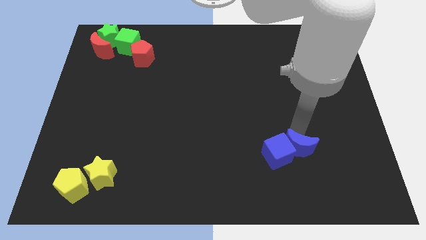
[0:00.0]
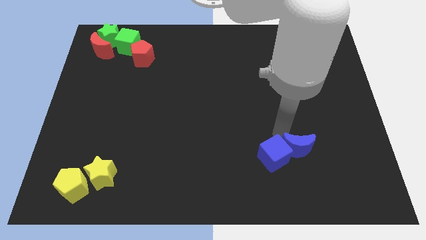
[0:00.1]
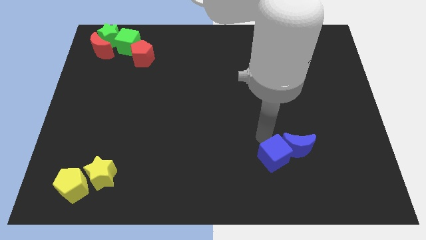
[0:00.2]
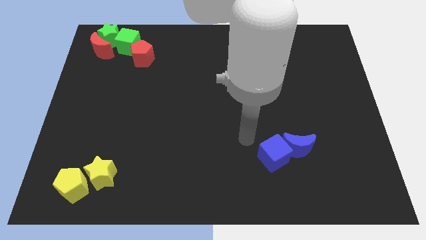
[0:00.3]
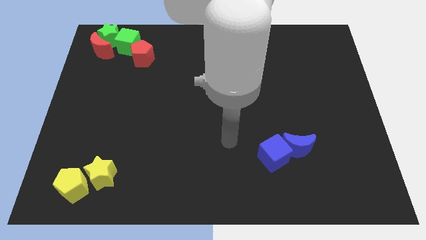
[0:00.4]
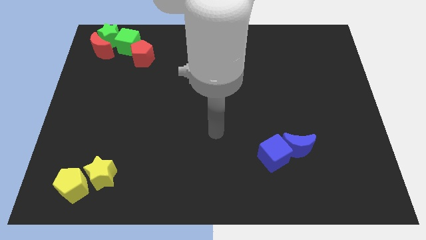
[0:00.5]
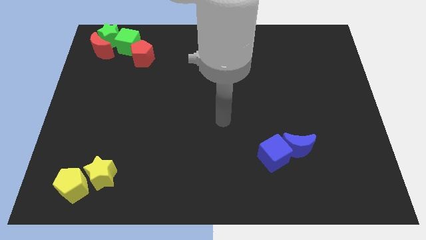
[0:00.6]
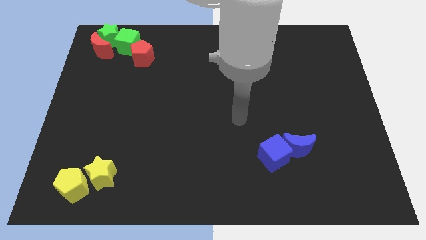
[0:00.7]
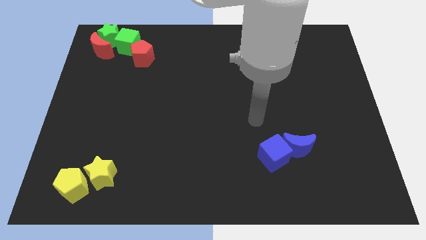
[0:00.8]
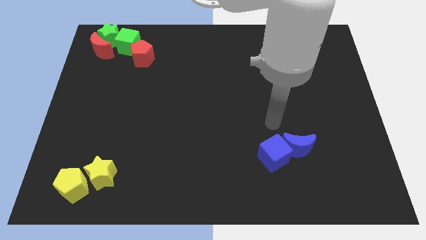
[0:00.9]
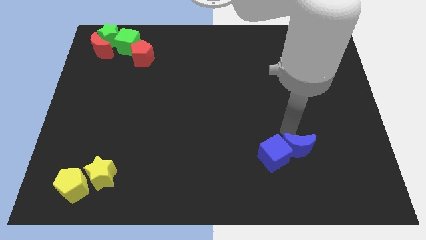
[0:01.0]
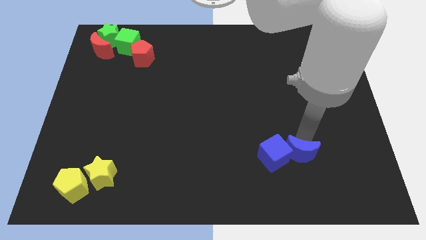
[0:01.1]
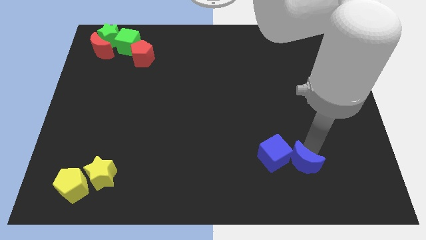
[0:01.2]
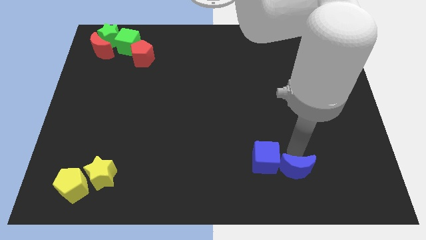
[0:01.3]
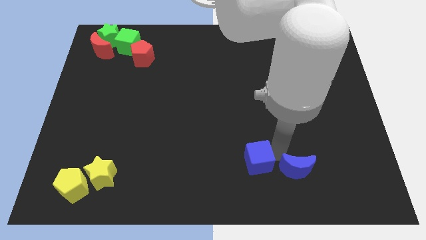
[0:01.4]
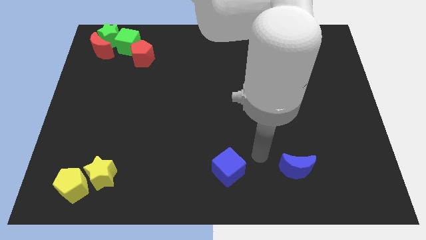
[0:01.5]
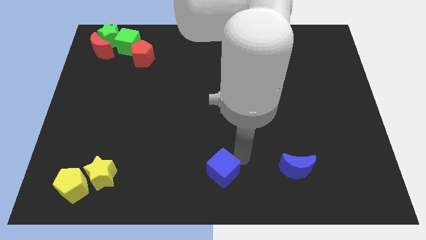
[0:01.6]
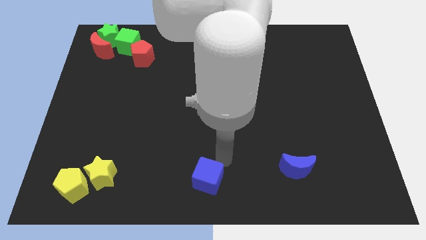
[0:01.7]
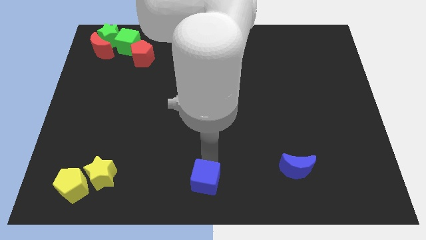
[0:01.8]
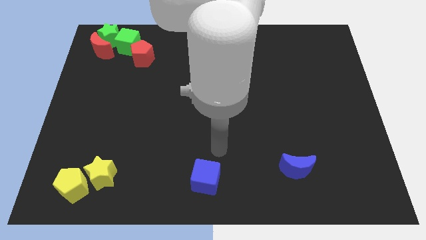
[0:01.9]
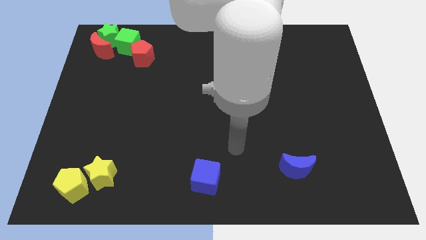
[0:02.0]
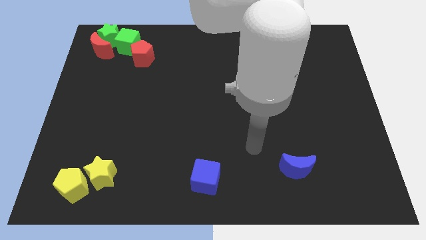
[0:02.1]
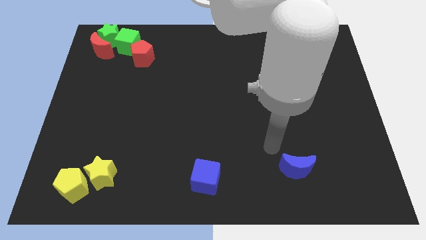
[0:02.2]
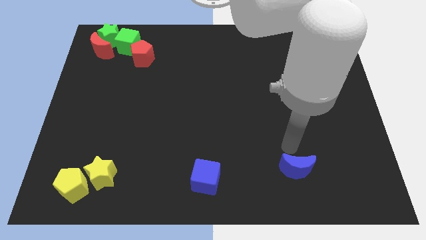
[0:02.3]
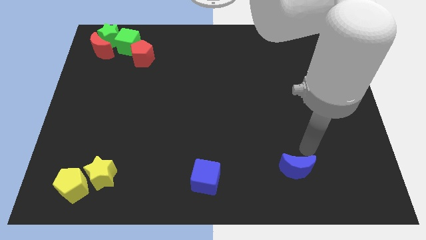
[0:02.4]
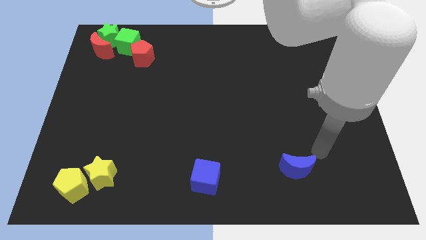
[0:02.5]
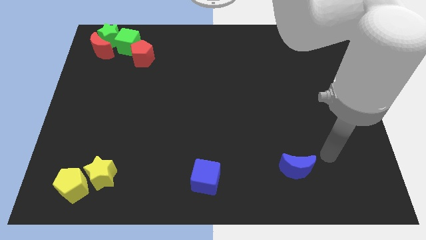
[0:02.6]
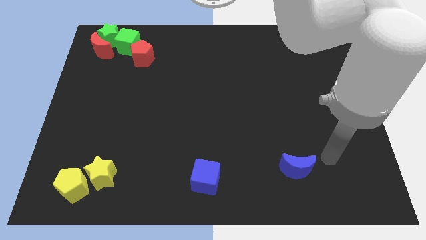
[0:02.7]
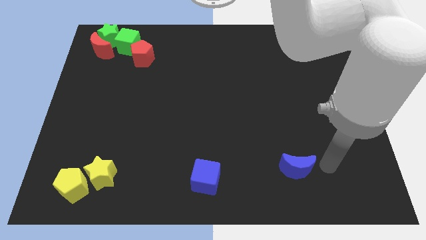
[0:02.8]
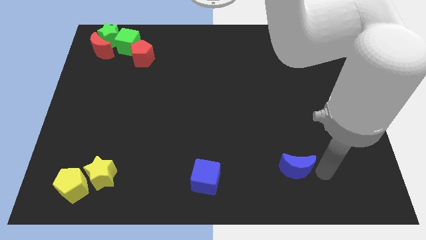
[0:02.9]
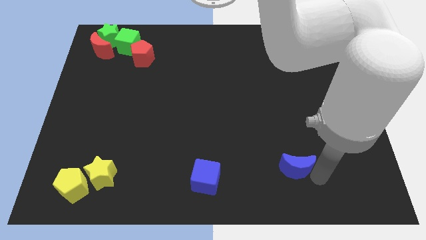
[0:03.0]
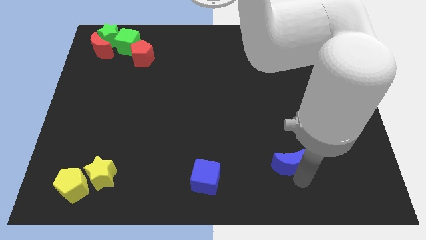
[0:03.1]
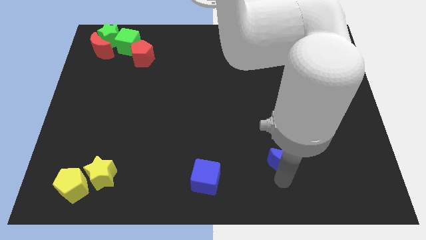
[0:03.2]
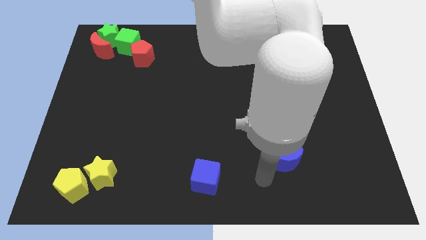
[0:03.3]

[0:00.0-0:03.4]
separate the blue cube from the blue moon

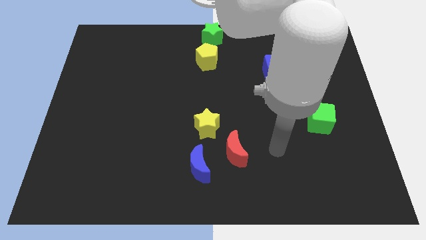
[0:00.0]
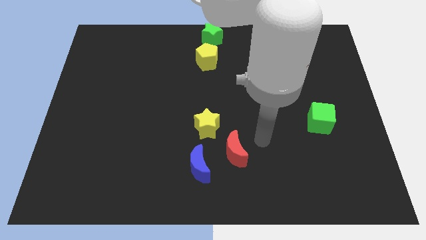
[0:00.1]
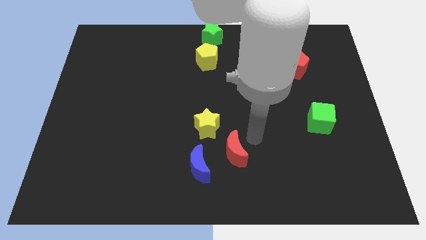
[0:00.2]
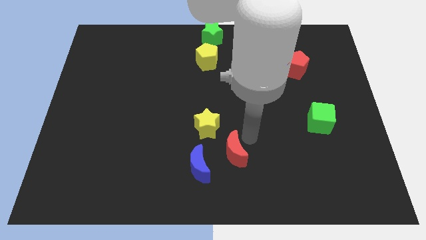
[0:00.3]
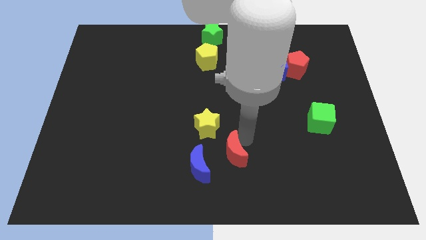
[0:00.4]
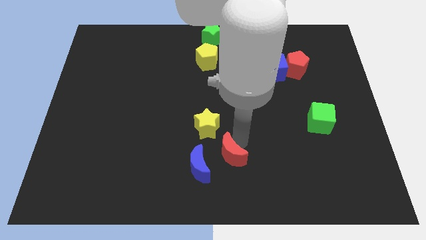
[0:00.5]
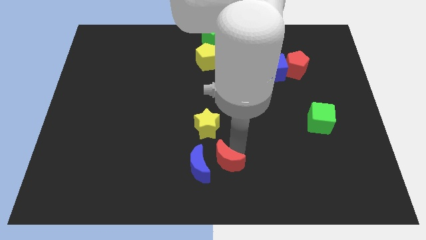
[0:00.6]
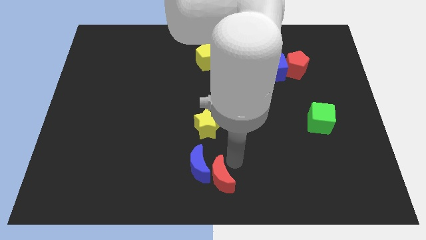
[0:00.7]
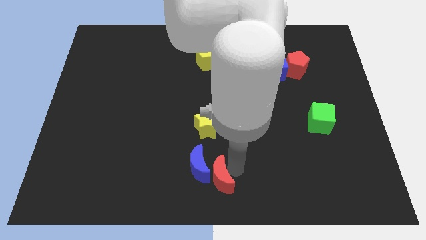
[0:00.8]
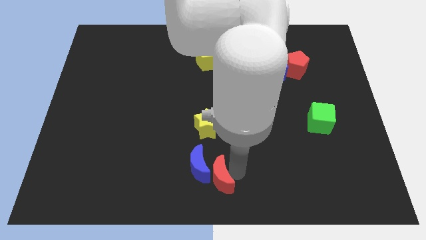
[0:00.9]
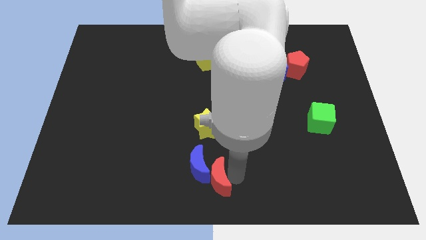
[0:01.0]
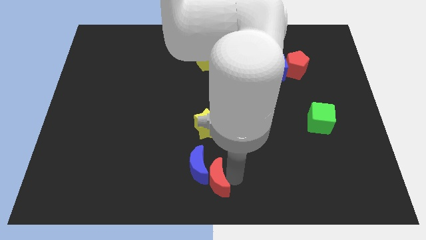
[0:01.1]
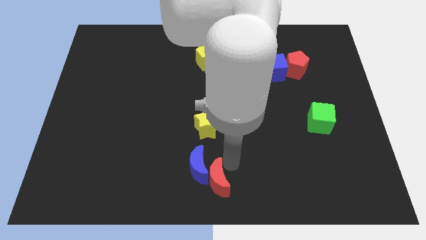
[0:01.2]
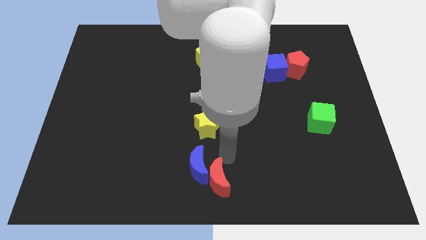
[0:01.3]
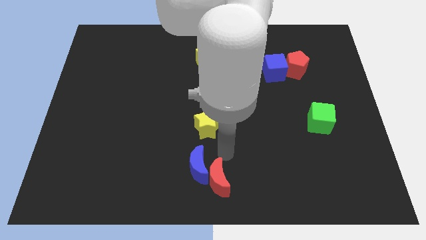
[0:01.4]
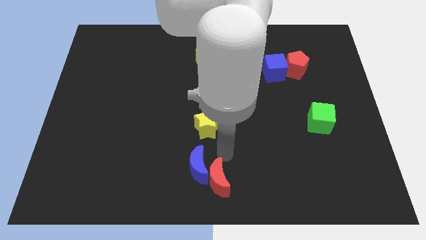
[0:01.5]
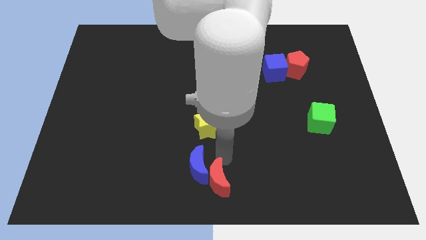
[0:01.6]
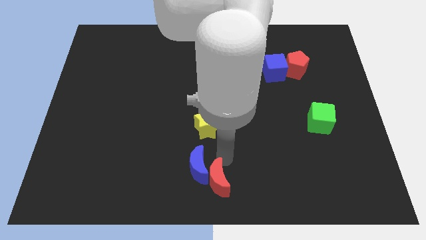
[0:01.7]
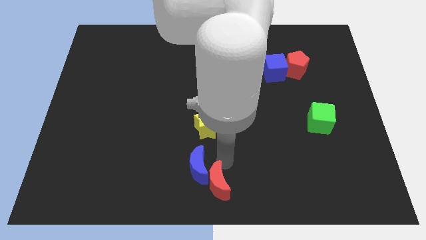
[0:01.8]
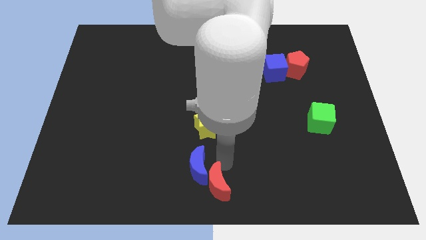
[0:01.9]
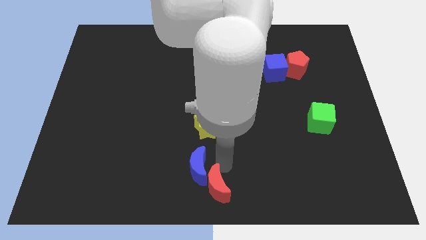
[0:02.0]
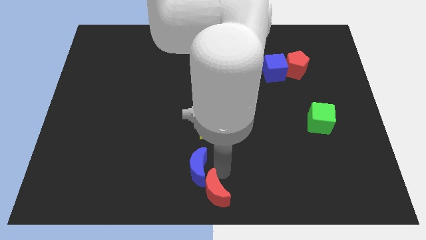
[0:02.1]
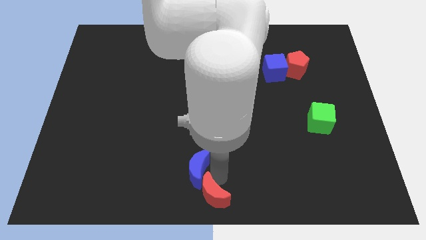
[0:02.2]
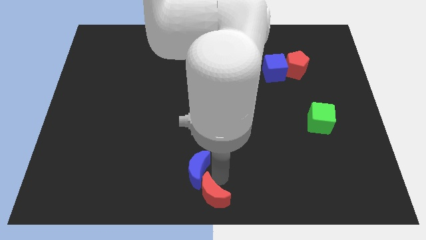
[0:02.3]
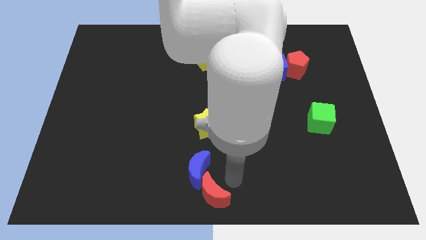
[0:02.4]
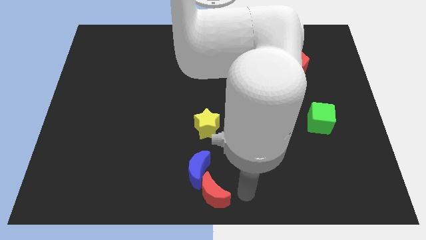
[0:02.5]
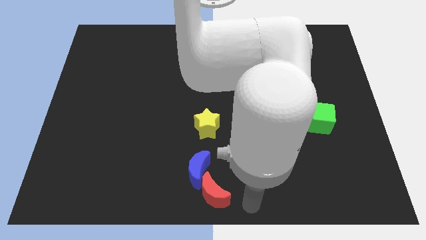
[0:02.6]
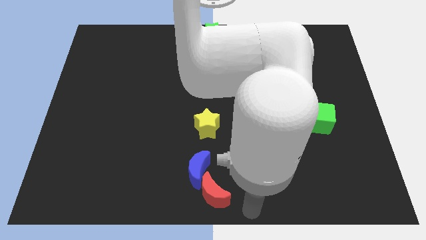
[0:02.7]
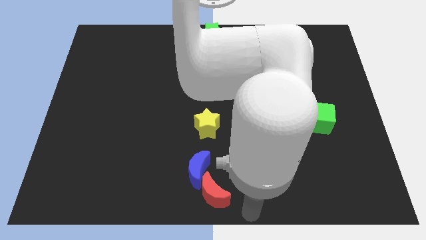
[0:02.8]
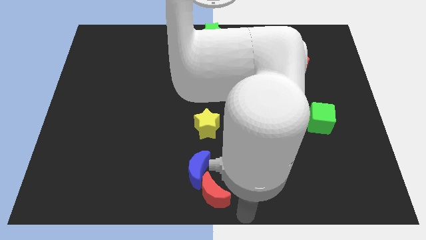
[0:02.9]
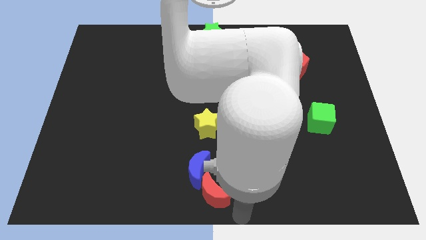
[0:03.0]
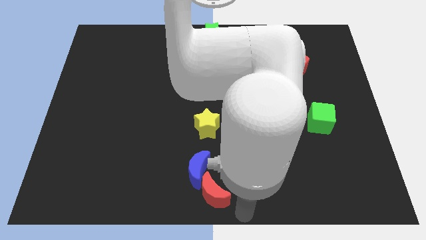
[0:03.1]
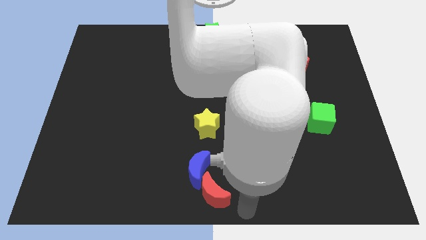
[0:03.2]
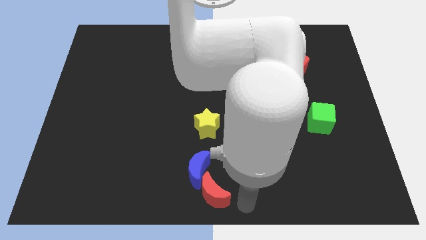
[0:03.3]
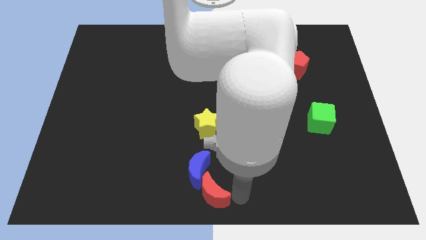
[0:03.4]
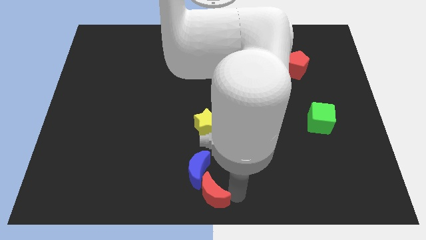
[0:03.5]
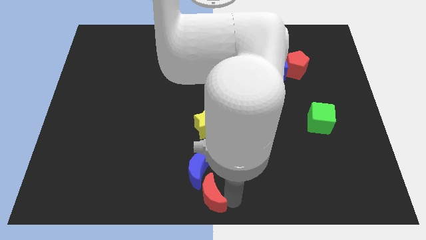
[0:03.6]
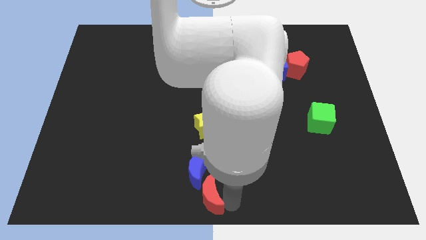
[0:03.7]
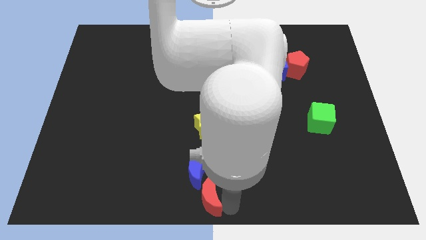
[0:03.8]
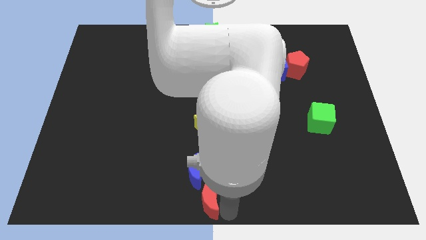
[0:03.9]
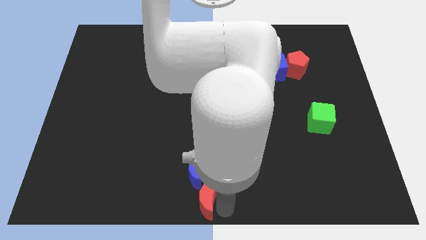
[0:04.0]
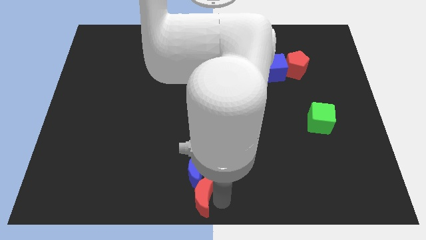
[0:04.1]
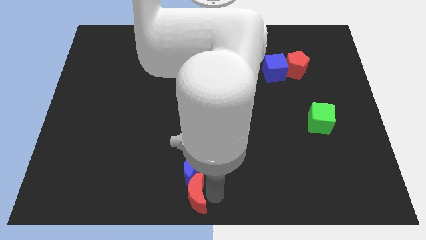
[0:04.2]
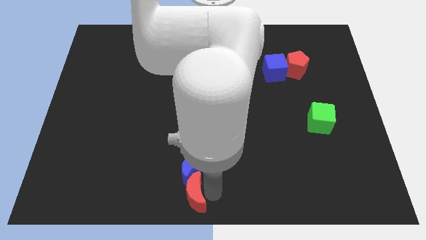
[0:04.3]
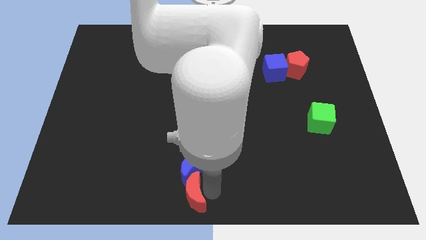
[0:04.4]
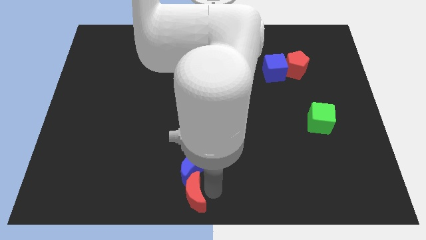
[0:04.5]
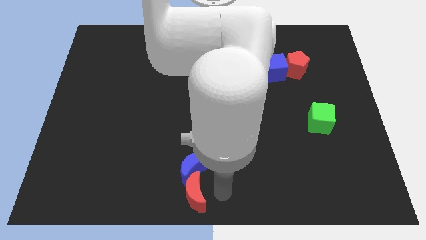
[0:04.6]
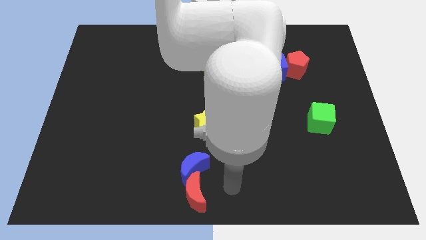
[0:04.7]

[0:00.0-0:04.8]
push the red moon to the bottom center

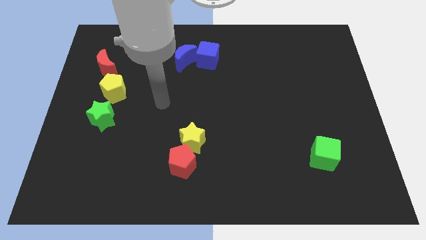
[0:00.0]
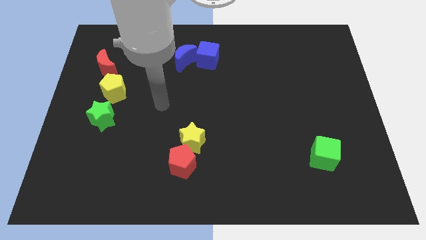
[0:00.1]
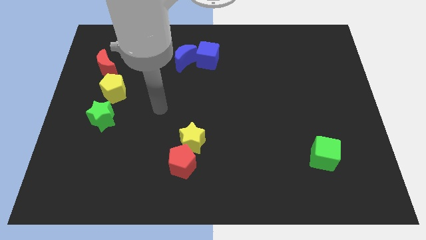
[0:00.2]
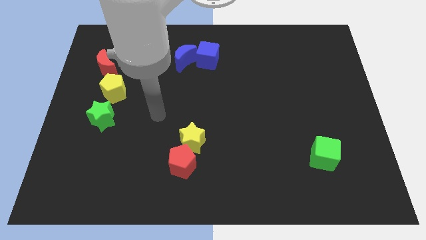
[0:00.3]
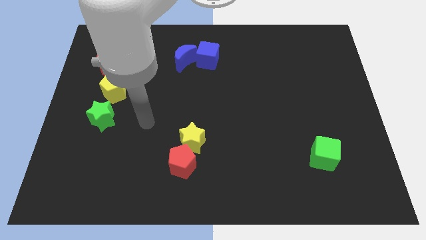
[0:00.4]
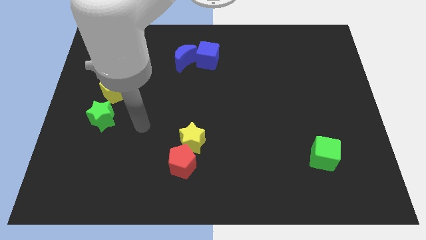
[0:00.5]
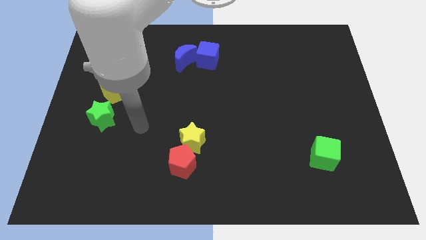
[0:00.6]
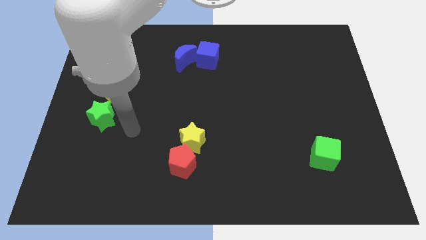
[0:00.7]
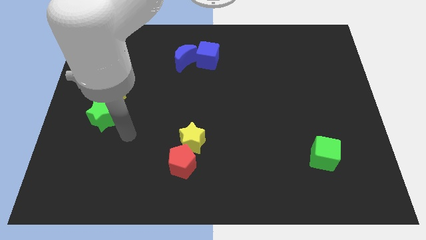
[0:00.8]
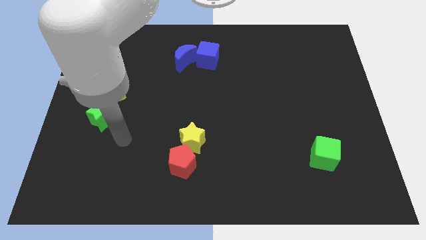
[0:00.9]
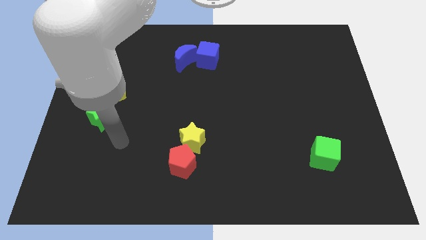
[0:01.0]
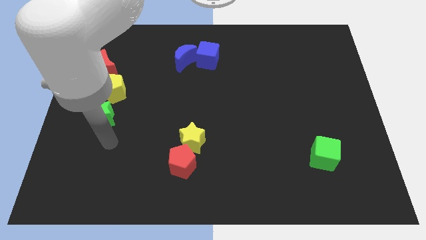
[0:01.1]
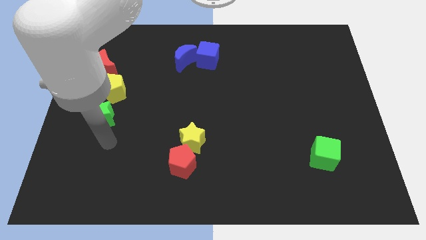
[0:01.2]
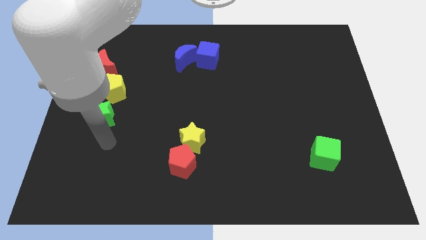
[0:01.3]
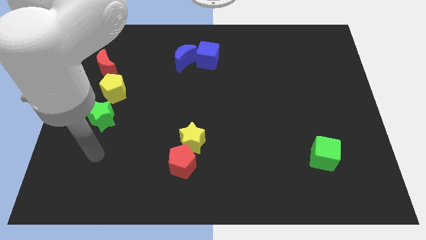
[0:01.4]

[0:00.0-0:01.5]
point your hand below the green star
